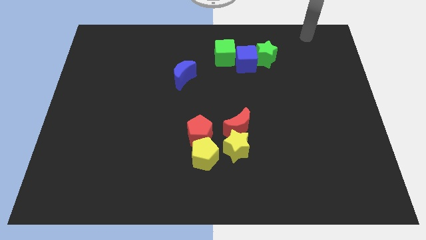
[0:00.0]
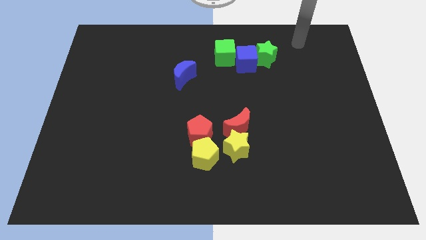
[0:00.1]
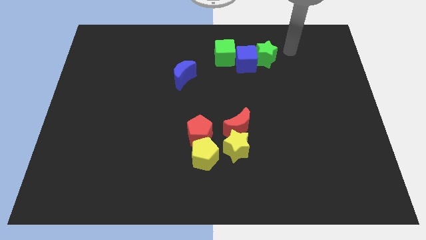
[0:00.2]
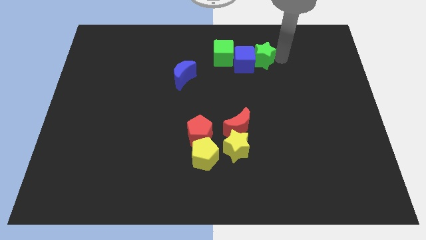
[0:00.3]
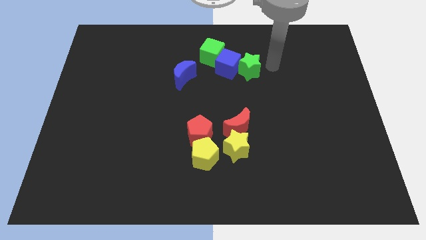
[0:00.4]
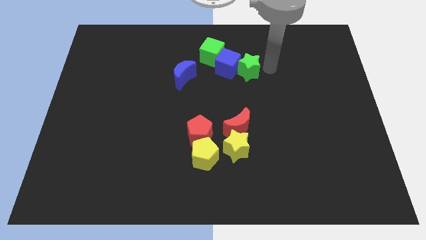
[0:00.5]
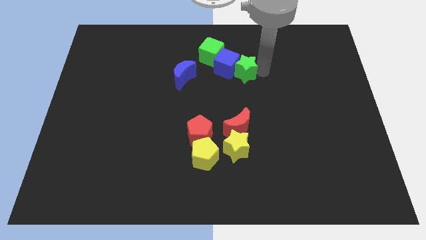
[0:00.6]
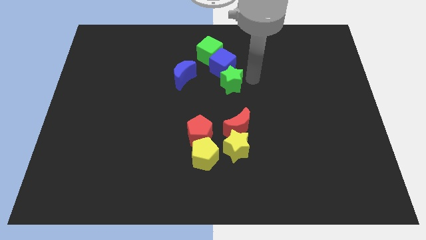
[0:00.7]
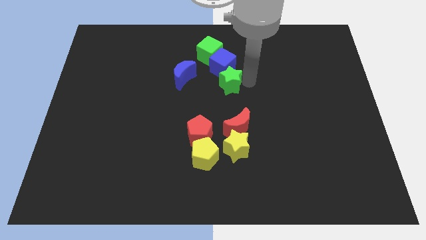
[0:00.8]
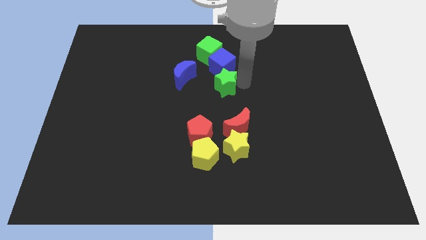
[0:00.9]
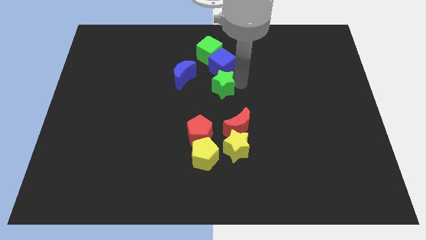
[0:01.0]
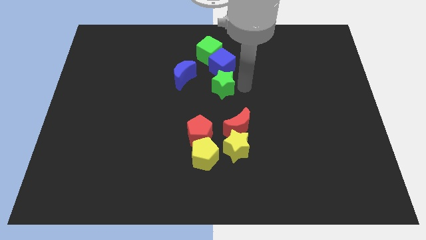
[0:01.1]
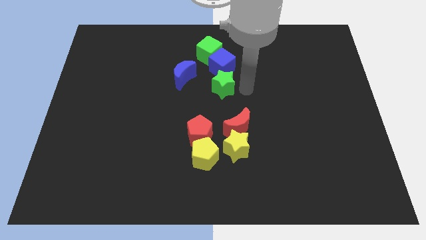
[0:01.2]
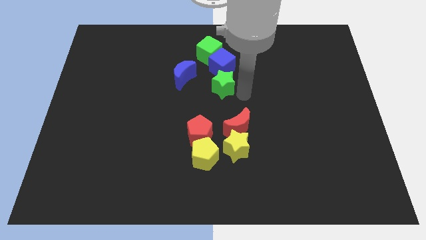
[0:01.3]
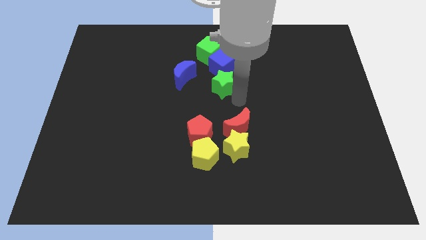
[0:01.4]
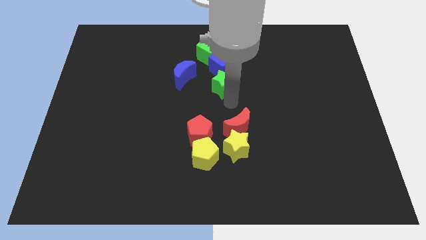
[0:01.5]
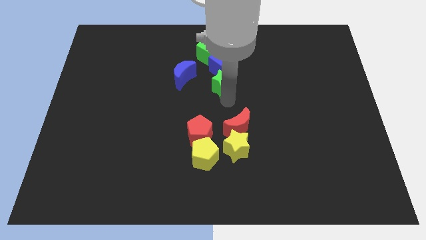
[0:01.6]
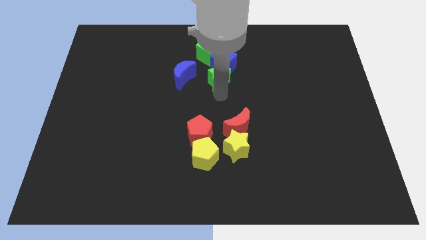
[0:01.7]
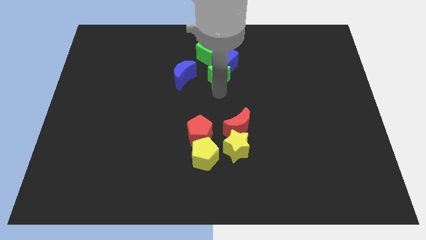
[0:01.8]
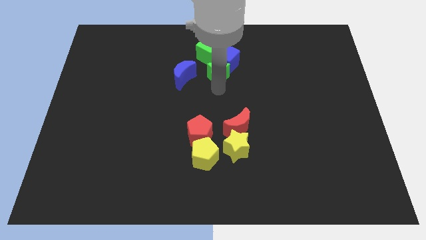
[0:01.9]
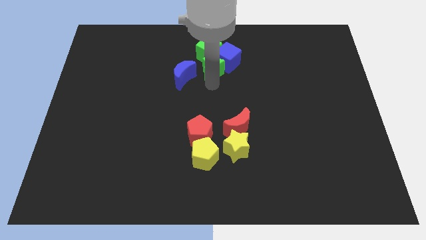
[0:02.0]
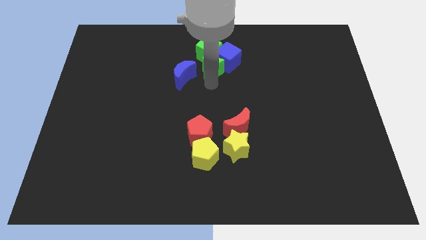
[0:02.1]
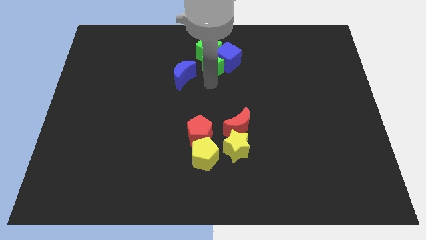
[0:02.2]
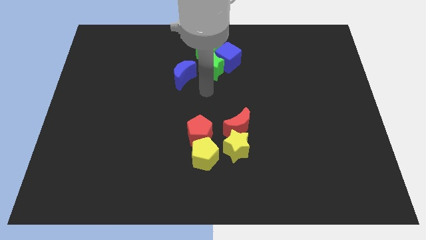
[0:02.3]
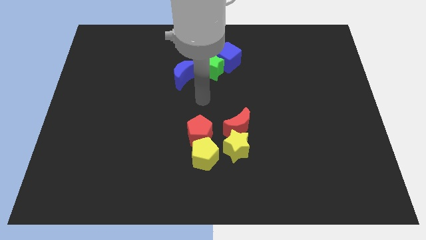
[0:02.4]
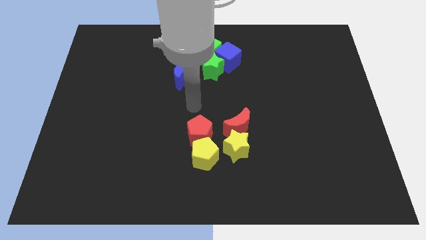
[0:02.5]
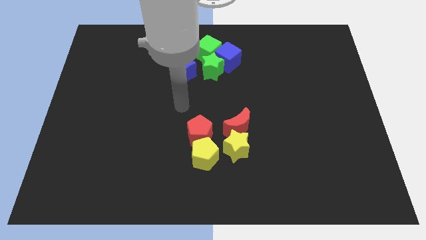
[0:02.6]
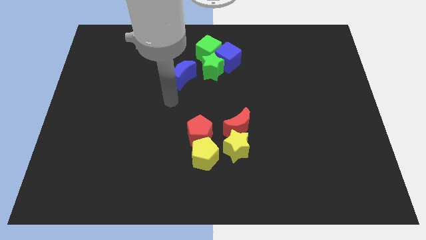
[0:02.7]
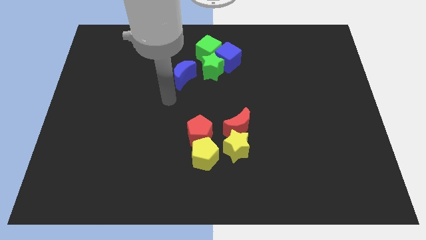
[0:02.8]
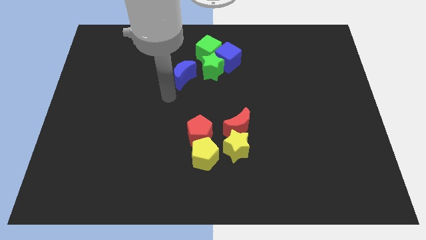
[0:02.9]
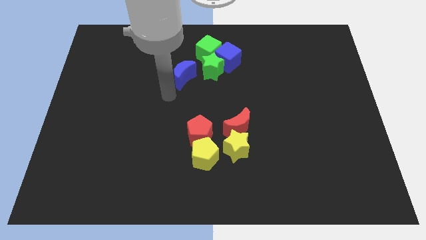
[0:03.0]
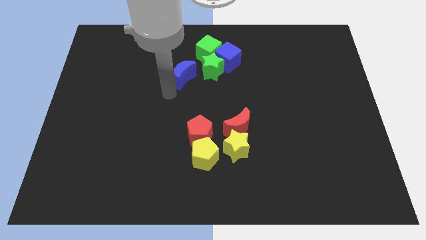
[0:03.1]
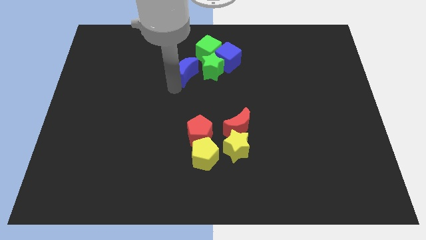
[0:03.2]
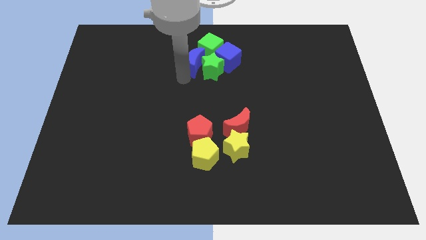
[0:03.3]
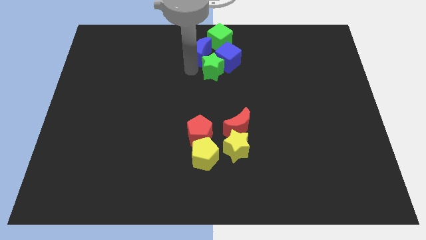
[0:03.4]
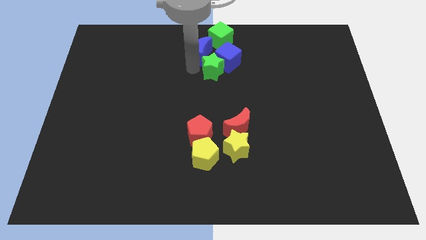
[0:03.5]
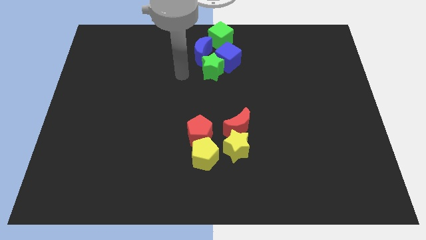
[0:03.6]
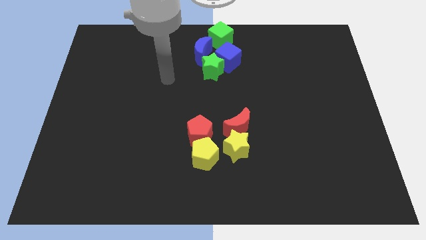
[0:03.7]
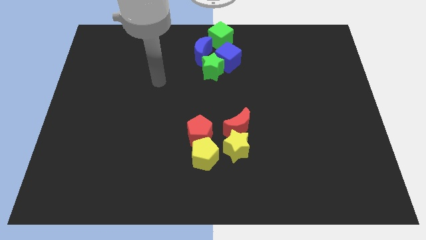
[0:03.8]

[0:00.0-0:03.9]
move the group of all green and blue blocks to the top center of the board

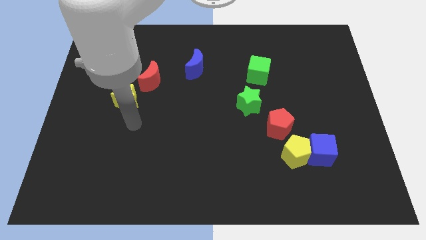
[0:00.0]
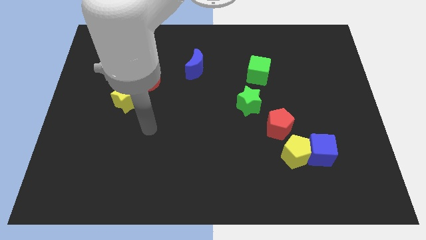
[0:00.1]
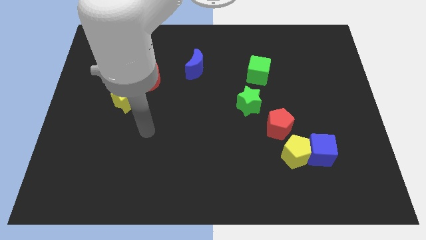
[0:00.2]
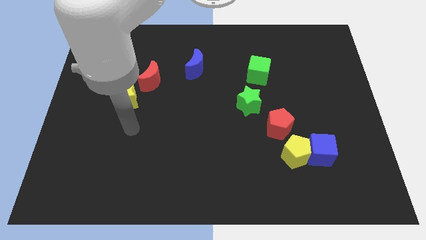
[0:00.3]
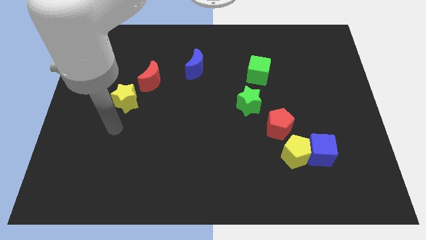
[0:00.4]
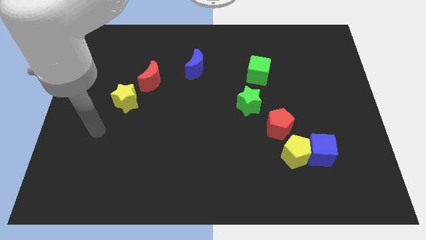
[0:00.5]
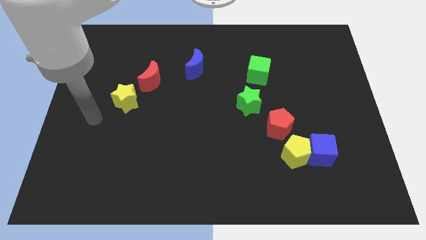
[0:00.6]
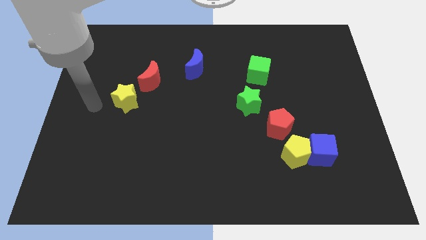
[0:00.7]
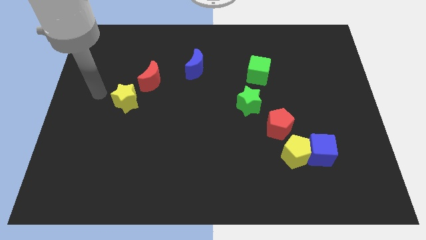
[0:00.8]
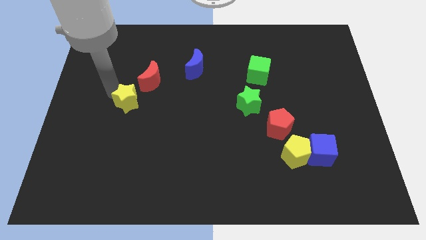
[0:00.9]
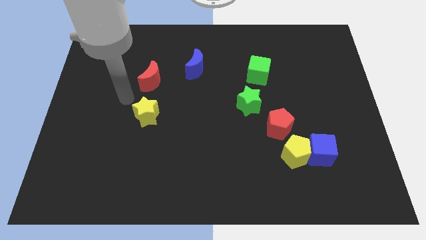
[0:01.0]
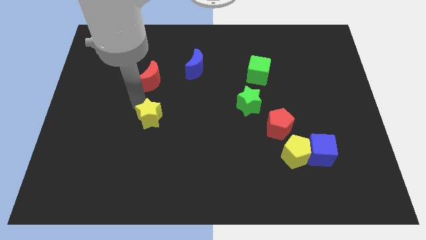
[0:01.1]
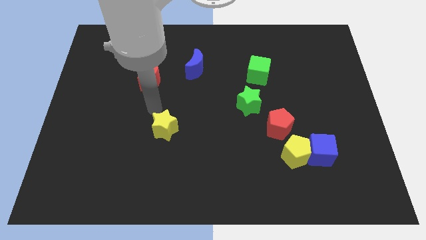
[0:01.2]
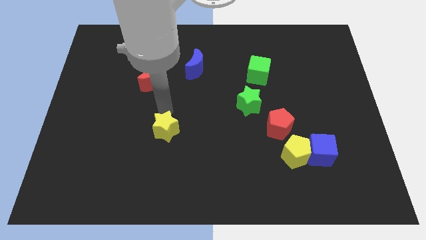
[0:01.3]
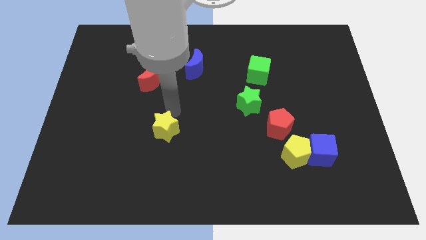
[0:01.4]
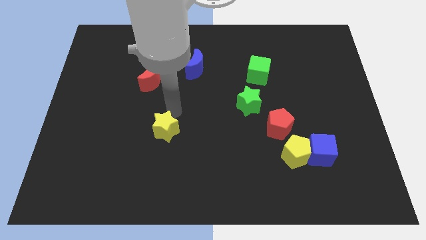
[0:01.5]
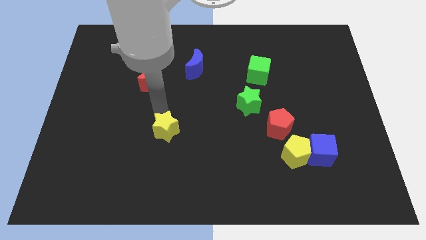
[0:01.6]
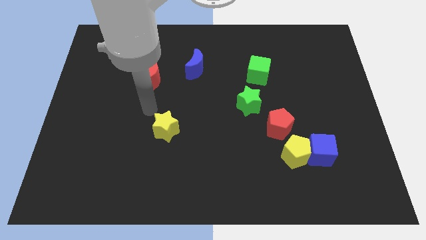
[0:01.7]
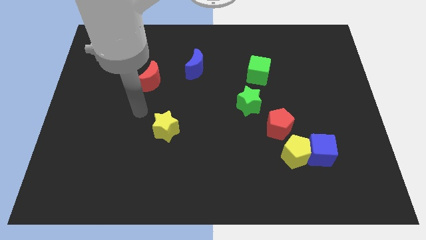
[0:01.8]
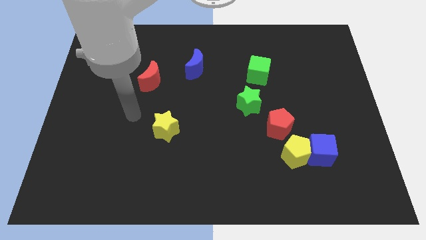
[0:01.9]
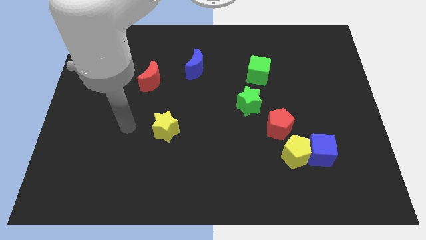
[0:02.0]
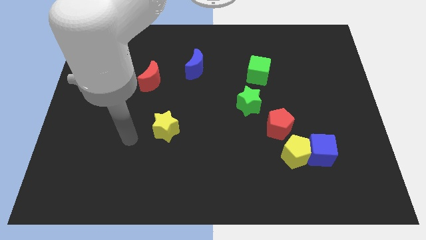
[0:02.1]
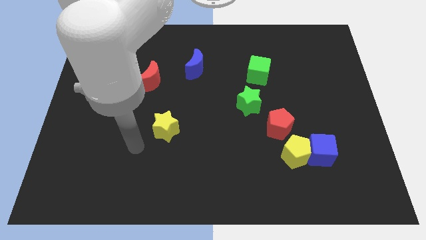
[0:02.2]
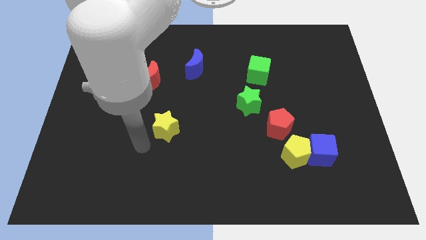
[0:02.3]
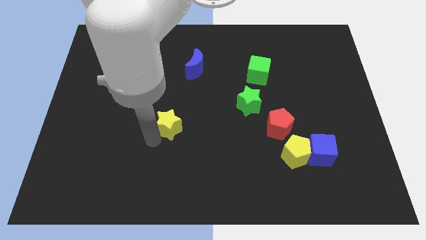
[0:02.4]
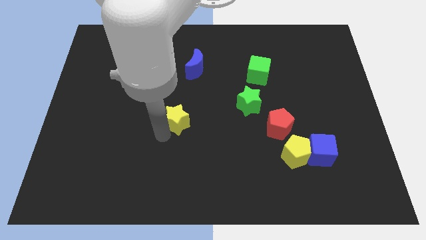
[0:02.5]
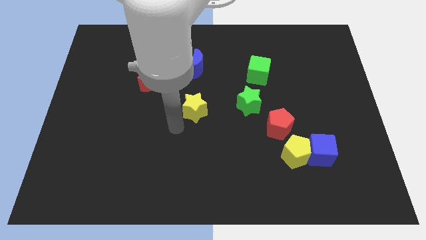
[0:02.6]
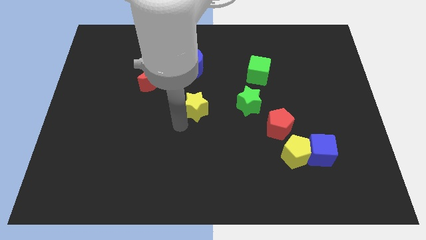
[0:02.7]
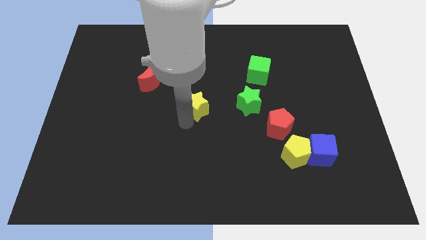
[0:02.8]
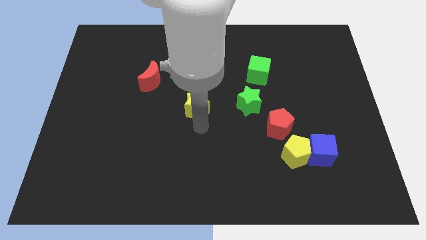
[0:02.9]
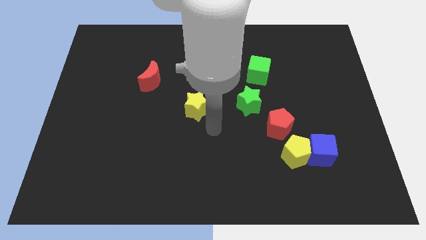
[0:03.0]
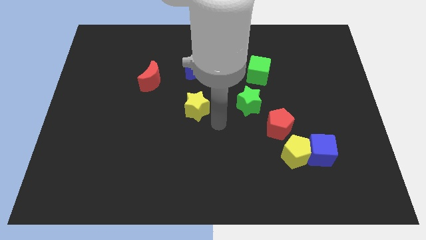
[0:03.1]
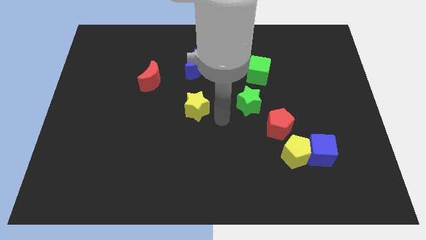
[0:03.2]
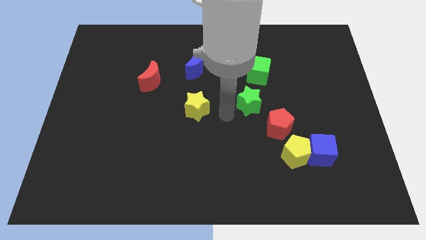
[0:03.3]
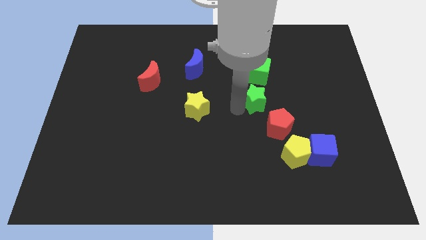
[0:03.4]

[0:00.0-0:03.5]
place the yellow star below the blue moon

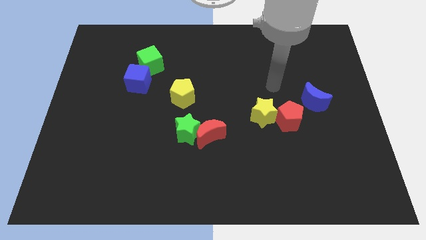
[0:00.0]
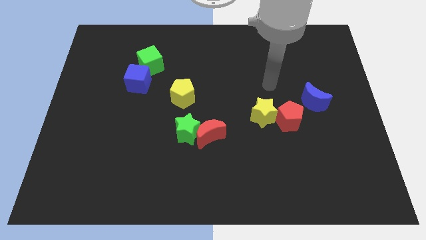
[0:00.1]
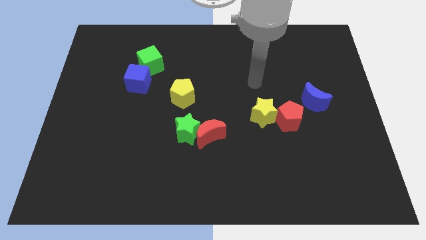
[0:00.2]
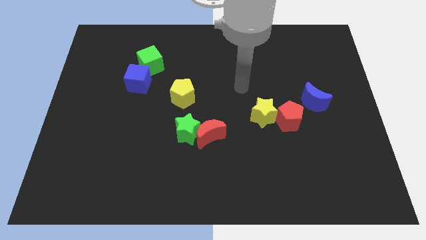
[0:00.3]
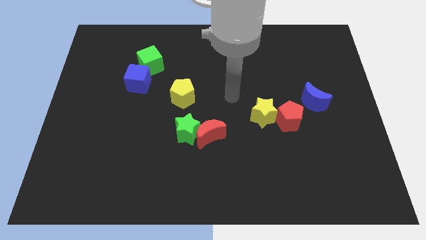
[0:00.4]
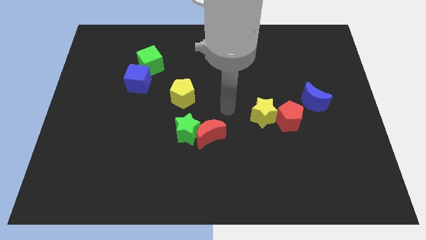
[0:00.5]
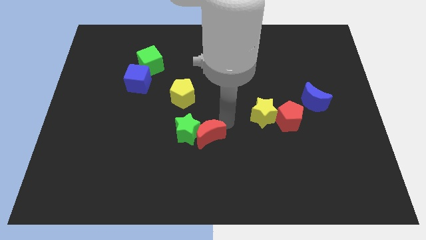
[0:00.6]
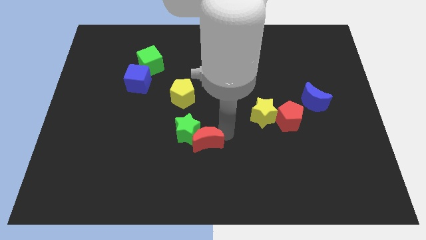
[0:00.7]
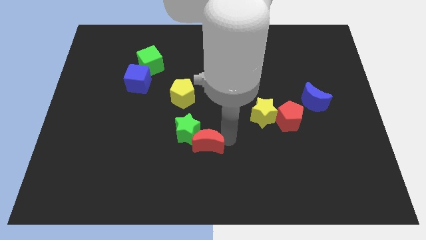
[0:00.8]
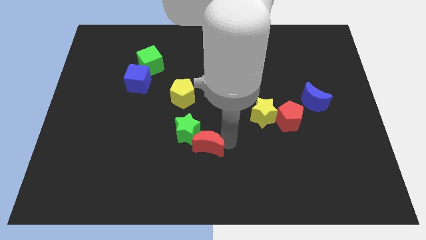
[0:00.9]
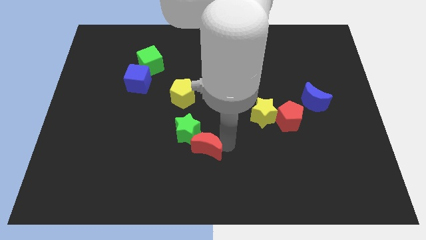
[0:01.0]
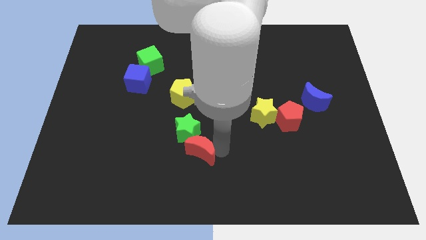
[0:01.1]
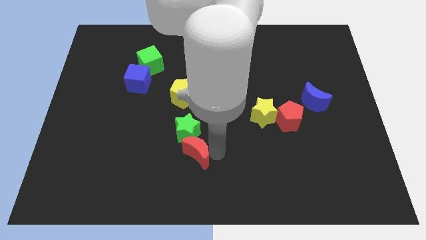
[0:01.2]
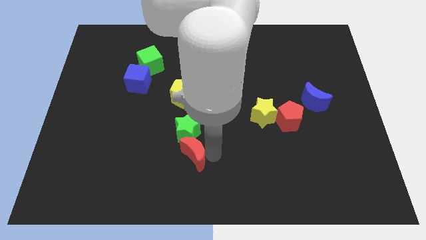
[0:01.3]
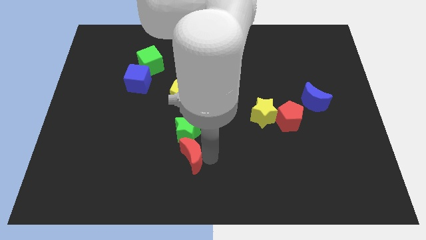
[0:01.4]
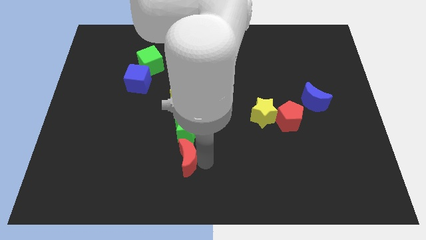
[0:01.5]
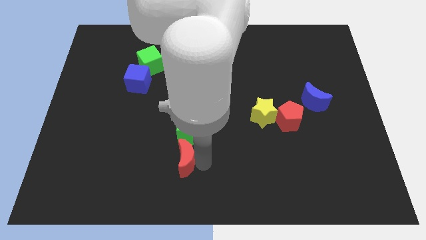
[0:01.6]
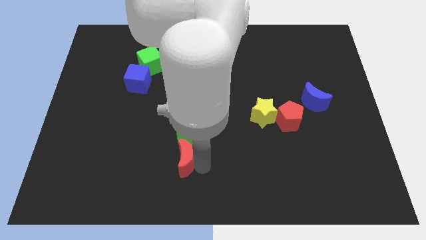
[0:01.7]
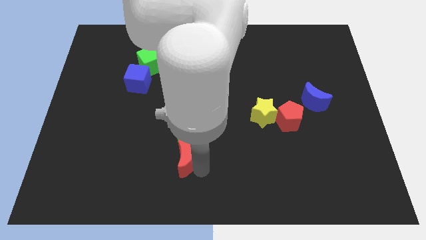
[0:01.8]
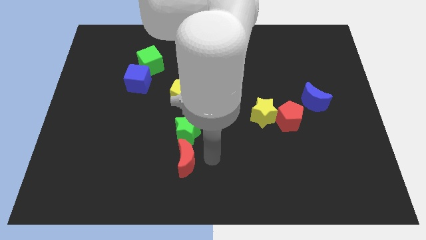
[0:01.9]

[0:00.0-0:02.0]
place red moon below green star
